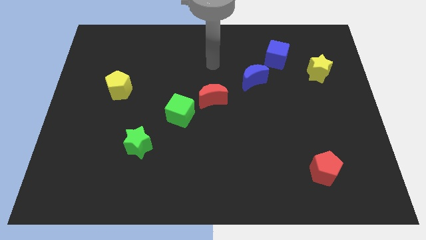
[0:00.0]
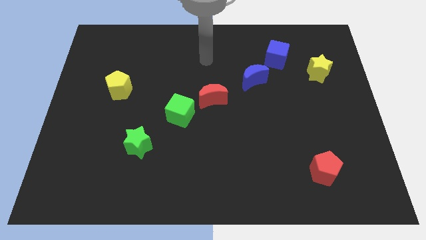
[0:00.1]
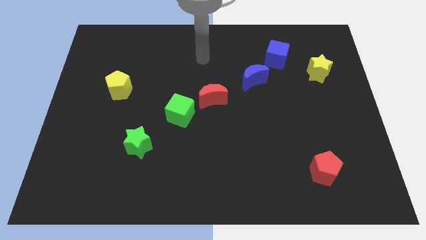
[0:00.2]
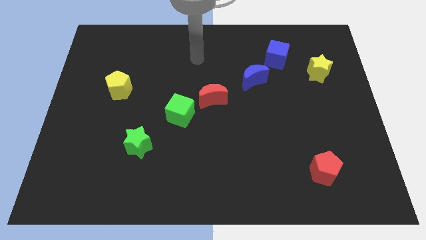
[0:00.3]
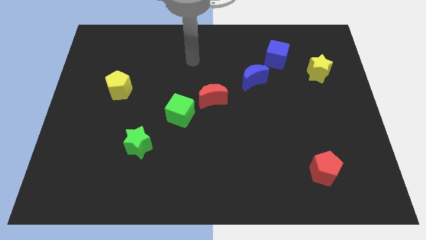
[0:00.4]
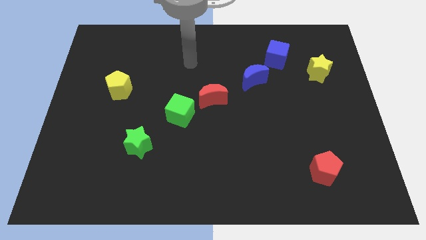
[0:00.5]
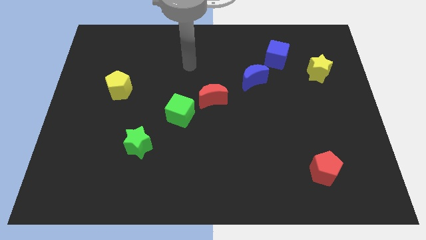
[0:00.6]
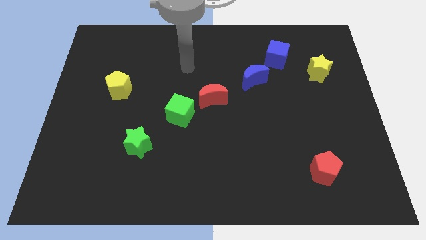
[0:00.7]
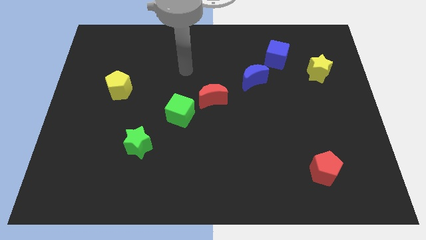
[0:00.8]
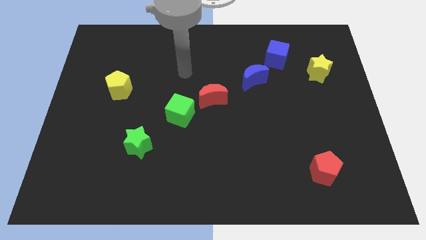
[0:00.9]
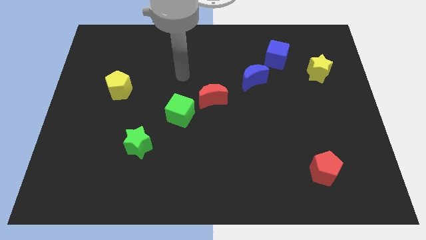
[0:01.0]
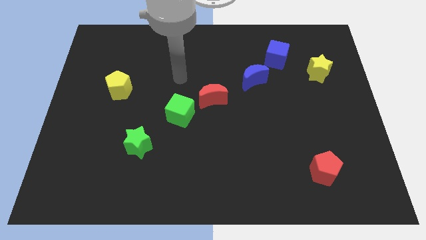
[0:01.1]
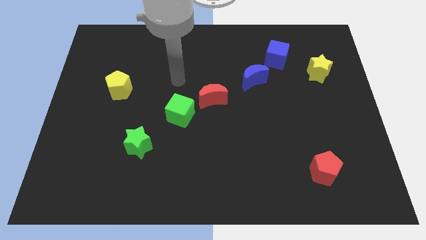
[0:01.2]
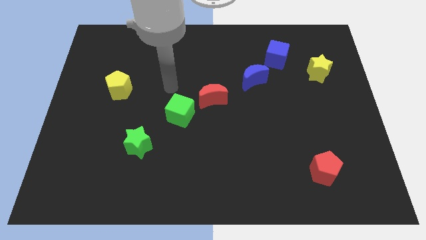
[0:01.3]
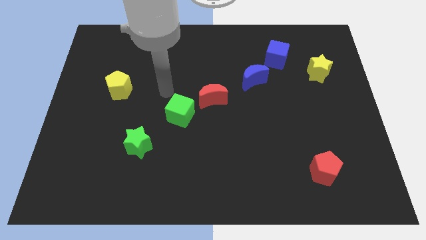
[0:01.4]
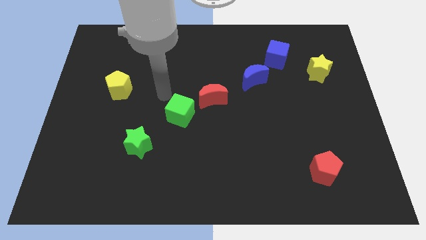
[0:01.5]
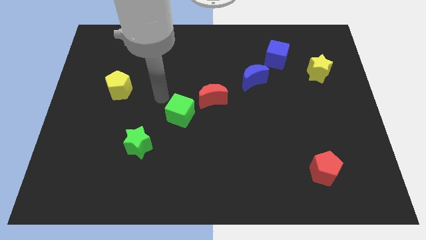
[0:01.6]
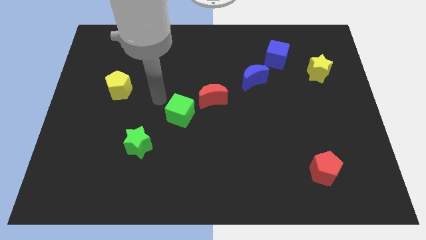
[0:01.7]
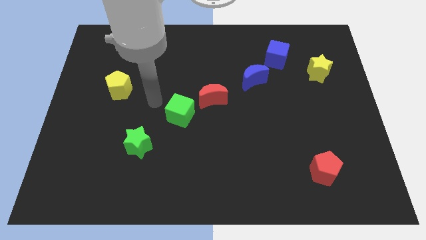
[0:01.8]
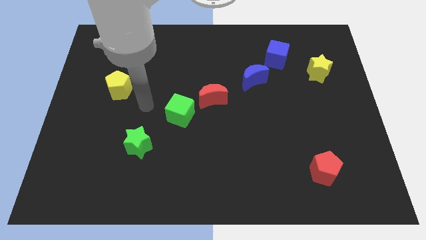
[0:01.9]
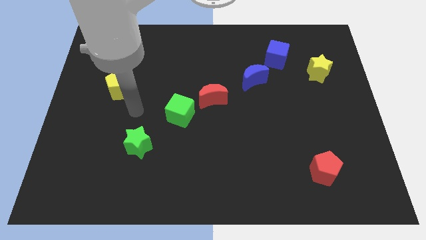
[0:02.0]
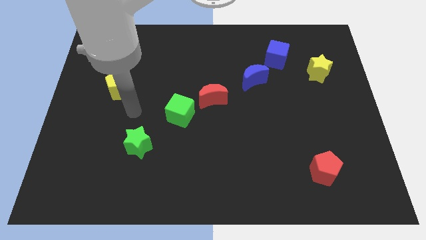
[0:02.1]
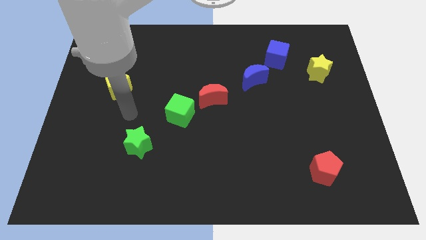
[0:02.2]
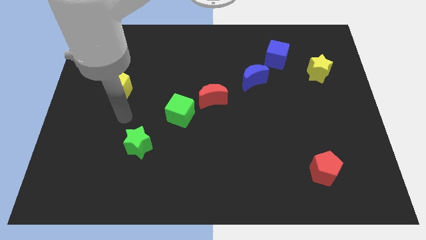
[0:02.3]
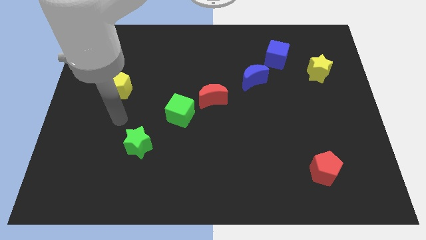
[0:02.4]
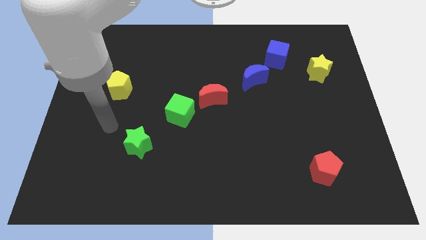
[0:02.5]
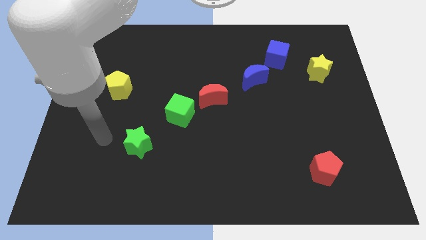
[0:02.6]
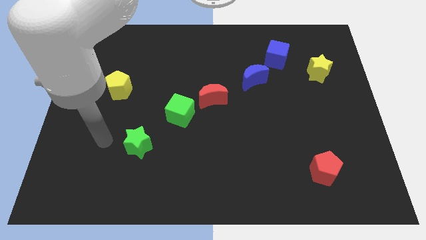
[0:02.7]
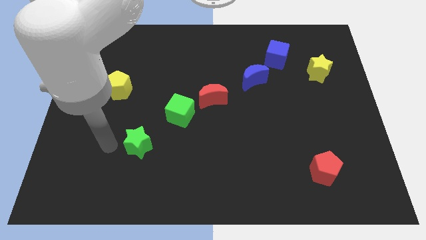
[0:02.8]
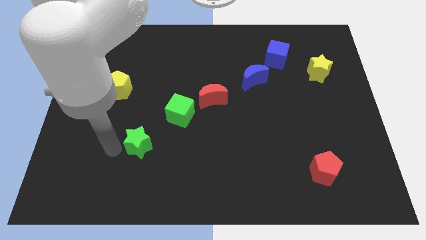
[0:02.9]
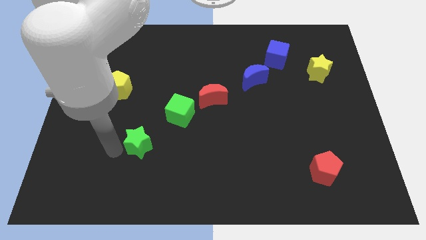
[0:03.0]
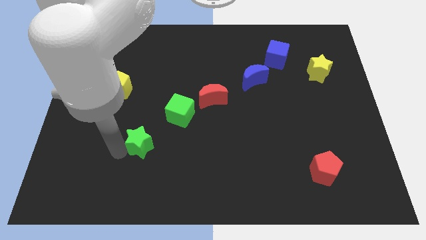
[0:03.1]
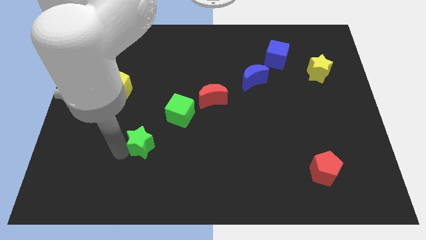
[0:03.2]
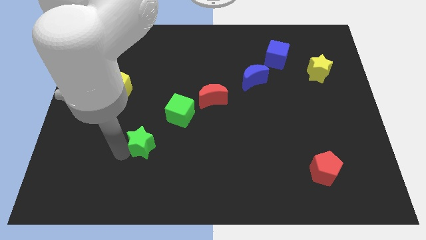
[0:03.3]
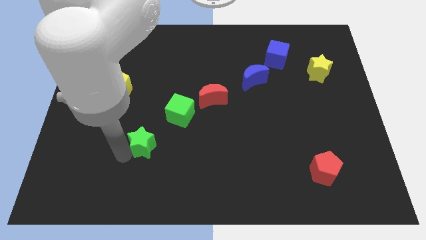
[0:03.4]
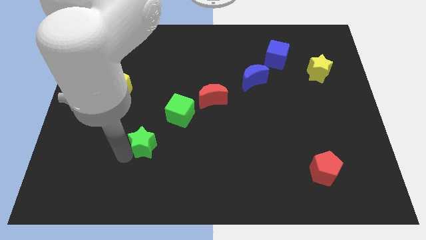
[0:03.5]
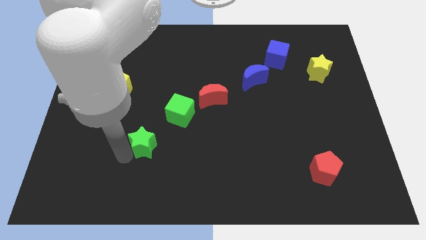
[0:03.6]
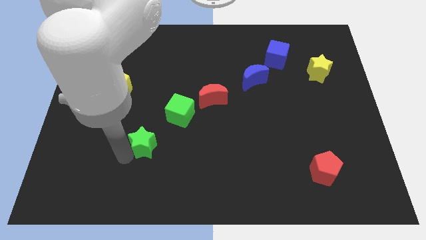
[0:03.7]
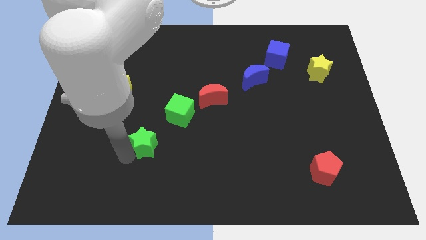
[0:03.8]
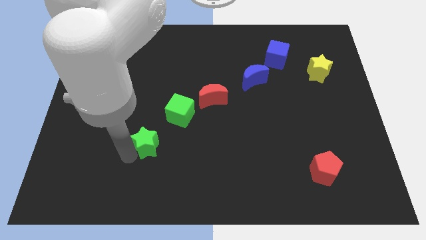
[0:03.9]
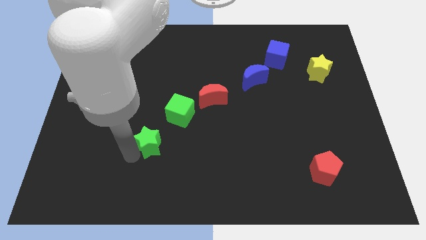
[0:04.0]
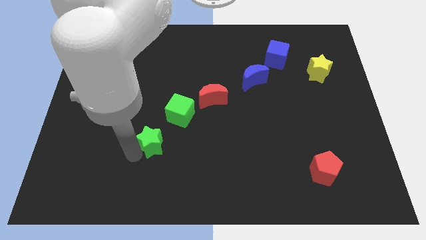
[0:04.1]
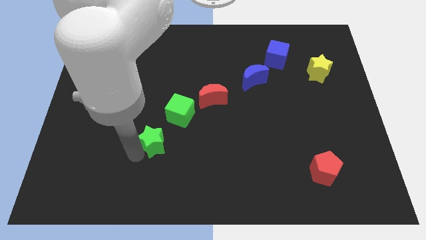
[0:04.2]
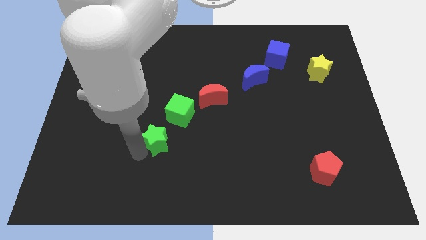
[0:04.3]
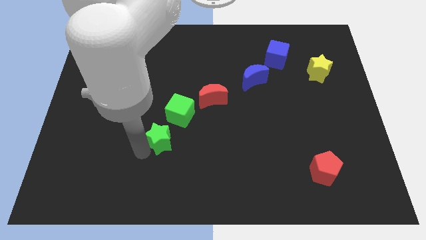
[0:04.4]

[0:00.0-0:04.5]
place the green star to the bottom left side of the green cube

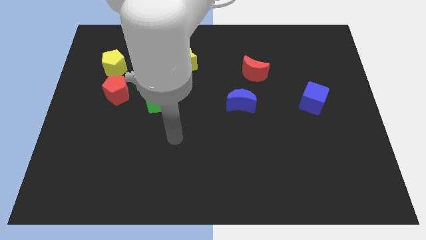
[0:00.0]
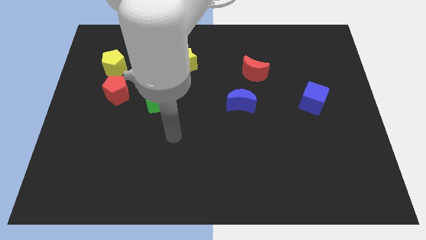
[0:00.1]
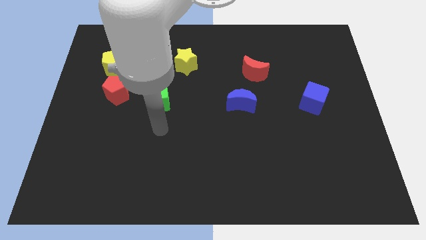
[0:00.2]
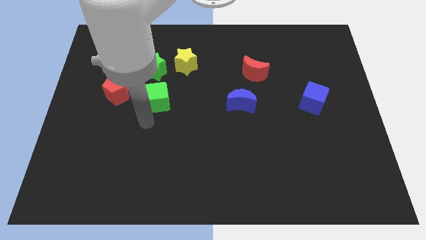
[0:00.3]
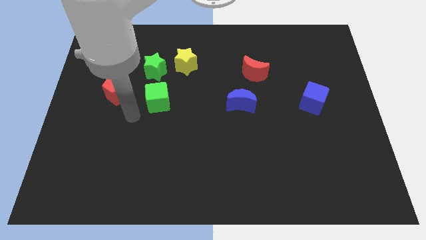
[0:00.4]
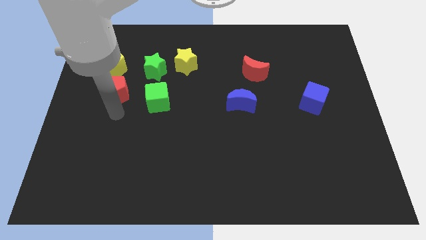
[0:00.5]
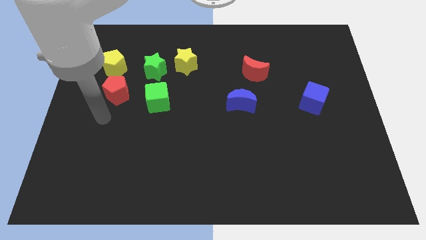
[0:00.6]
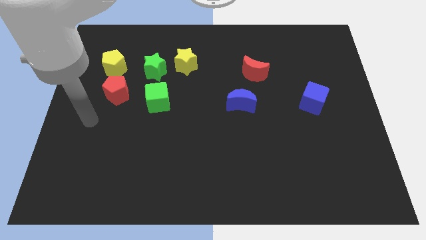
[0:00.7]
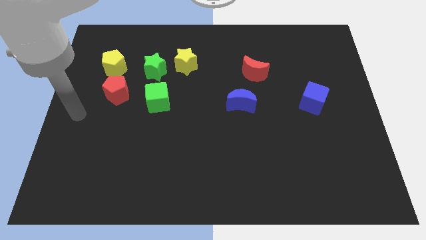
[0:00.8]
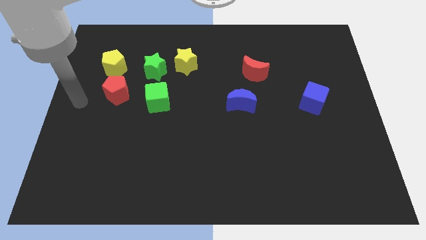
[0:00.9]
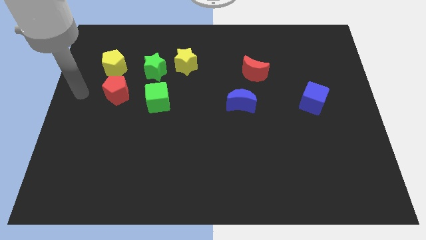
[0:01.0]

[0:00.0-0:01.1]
go near the red pentagon

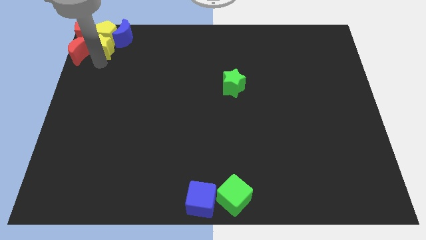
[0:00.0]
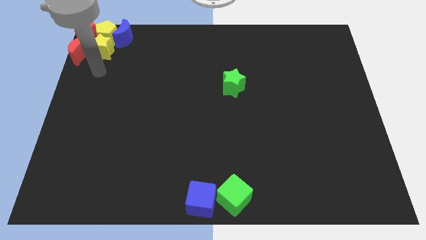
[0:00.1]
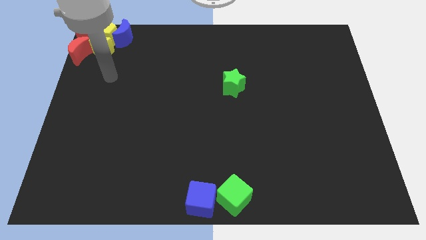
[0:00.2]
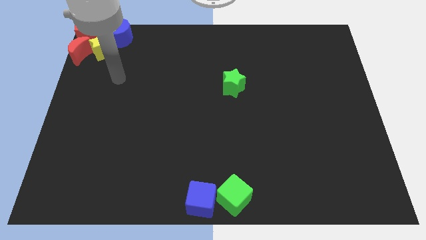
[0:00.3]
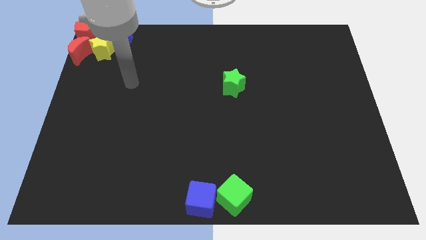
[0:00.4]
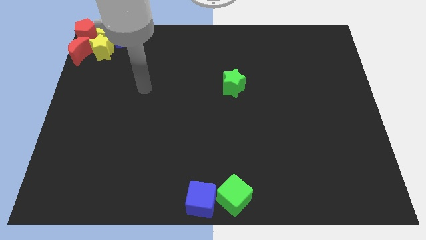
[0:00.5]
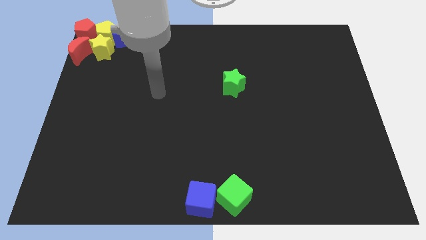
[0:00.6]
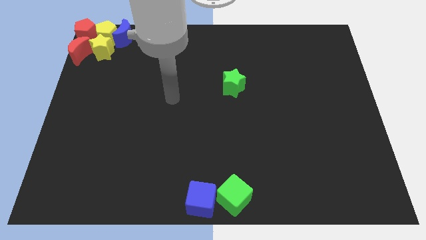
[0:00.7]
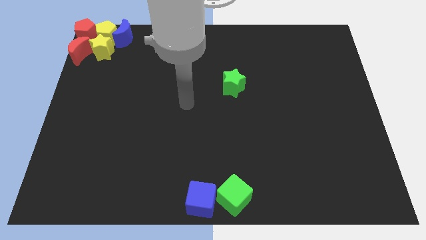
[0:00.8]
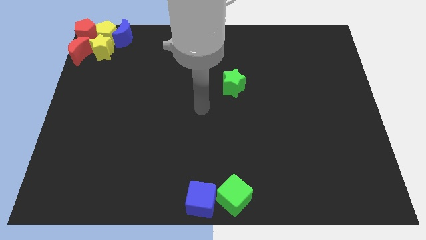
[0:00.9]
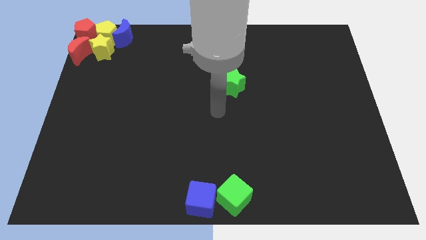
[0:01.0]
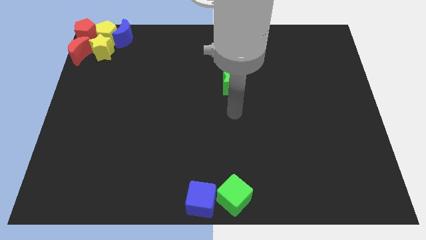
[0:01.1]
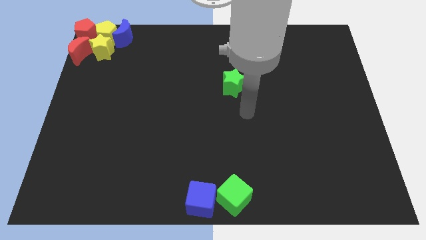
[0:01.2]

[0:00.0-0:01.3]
move your hand at the bottom of the green star vertically

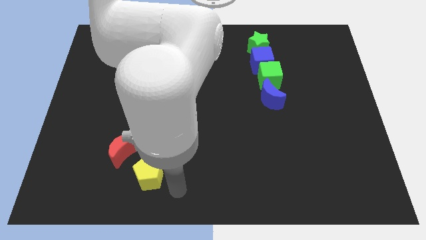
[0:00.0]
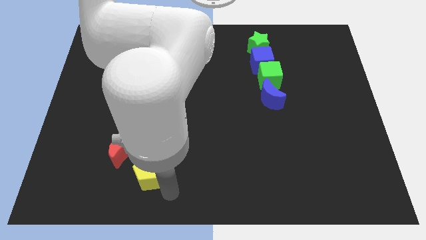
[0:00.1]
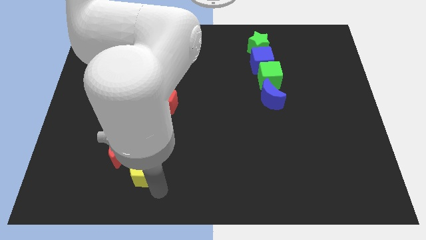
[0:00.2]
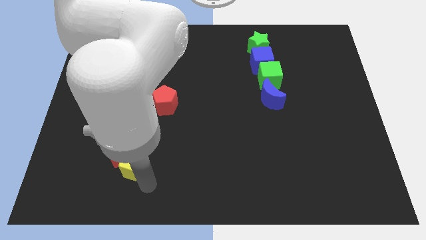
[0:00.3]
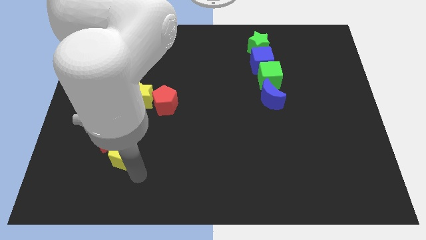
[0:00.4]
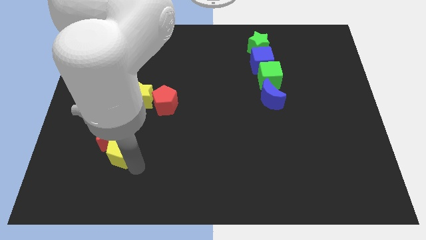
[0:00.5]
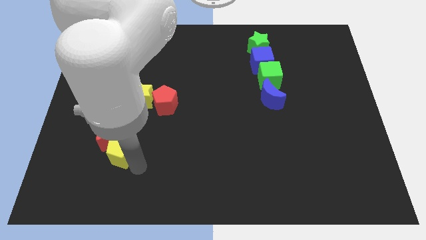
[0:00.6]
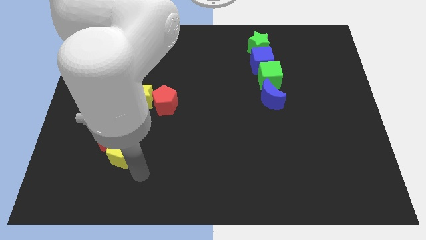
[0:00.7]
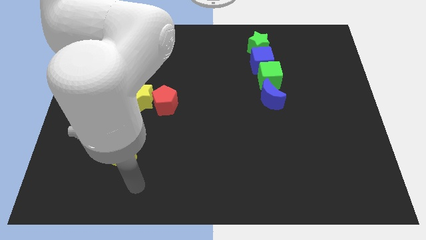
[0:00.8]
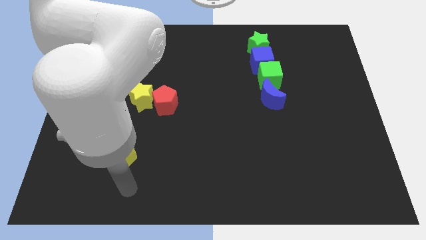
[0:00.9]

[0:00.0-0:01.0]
push the yellow pentagon into the red crescent

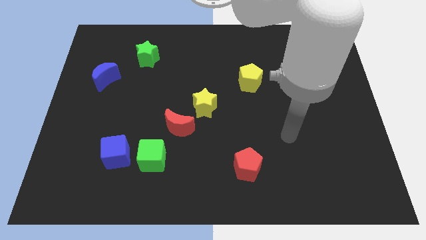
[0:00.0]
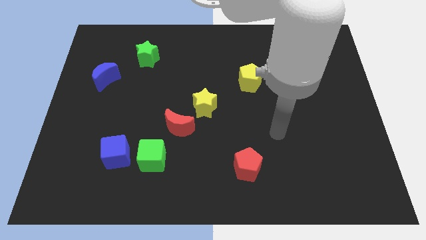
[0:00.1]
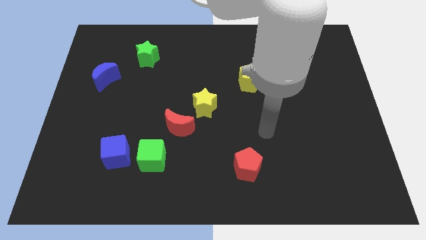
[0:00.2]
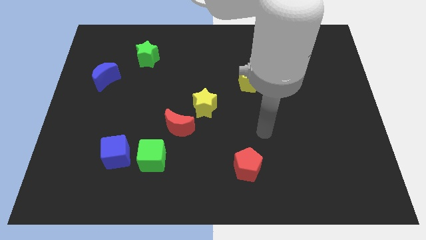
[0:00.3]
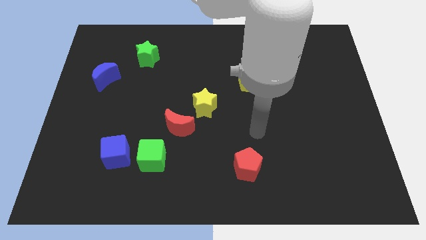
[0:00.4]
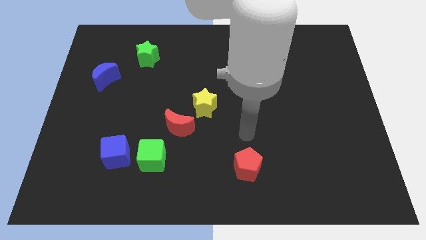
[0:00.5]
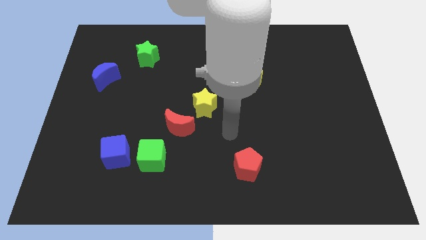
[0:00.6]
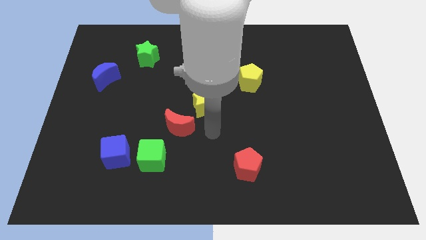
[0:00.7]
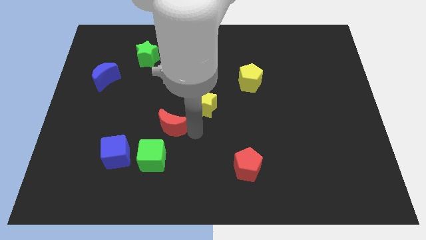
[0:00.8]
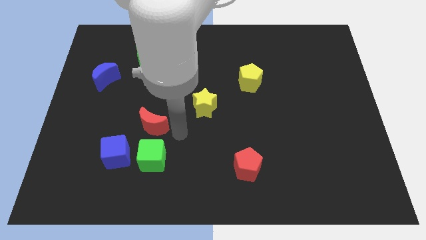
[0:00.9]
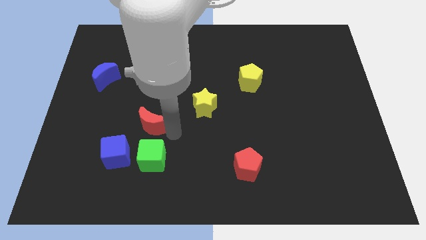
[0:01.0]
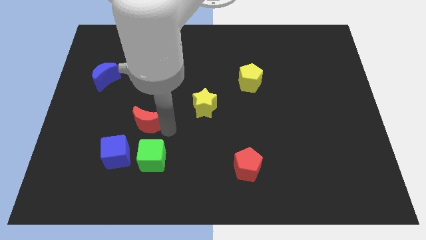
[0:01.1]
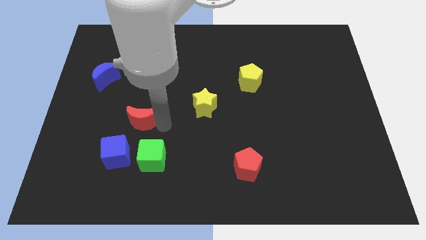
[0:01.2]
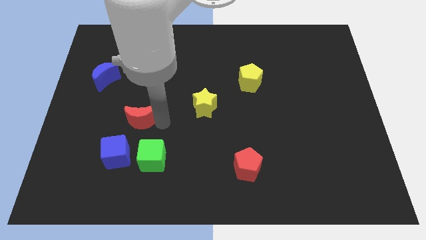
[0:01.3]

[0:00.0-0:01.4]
move the red moon towards the left
